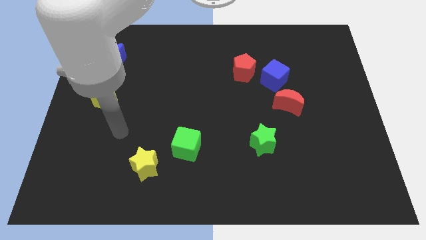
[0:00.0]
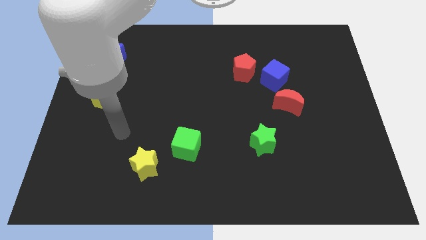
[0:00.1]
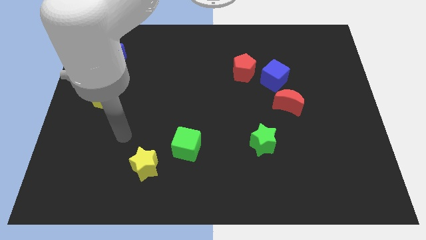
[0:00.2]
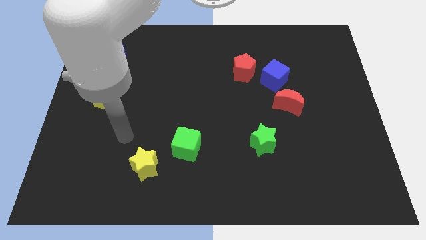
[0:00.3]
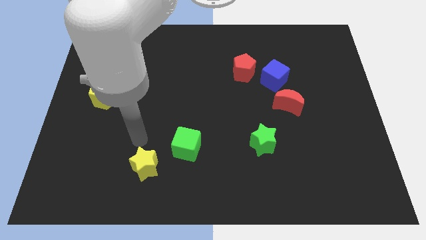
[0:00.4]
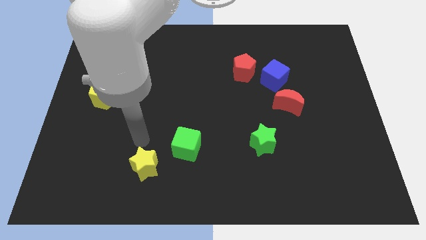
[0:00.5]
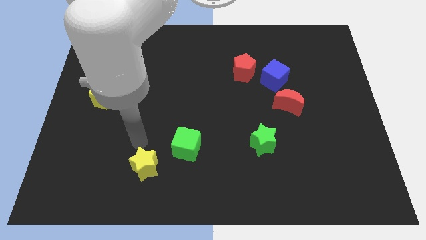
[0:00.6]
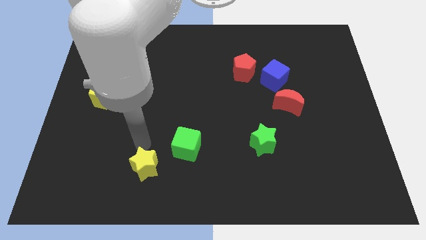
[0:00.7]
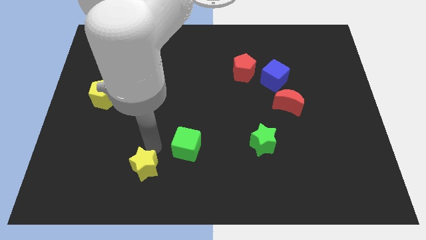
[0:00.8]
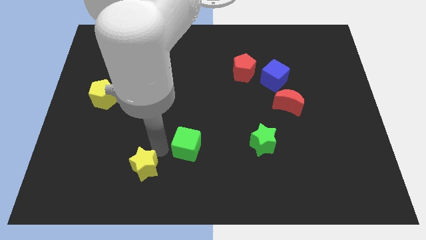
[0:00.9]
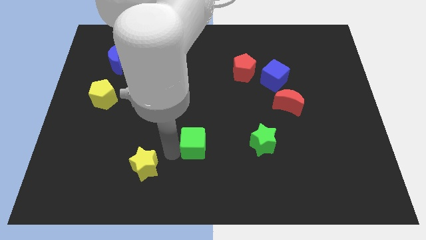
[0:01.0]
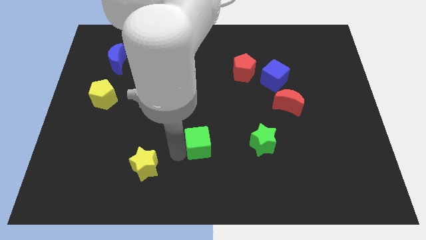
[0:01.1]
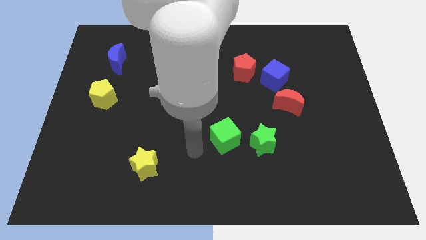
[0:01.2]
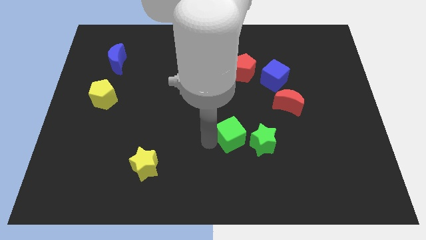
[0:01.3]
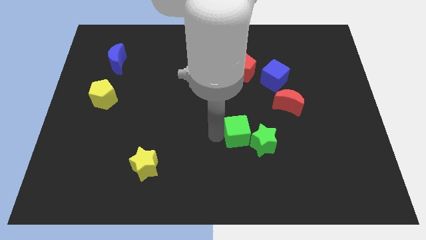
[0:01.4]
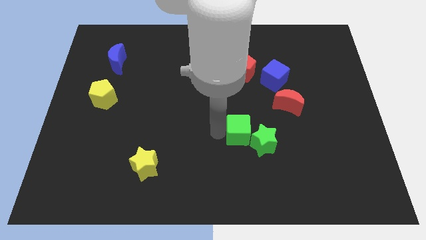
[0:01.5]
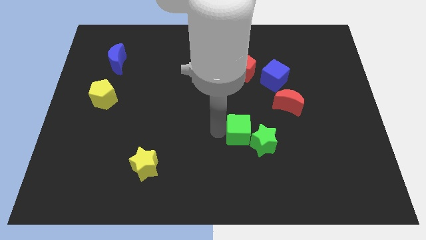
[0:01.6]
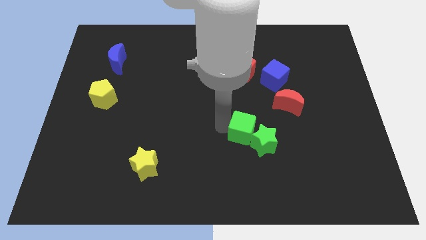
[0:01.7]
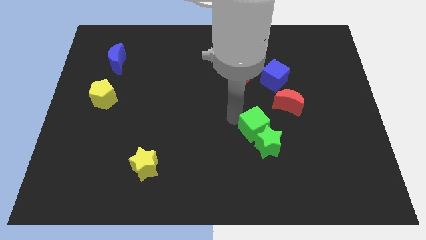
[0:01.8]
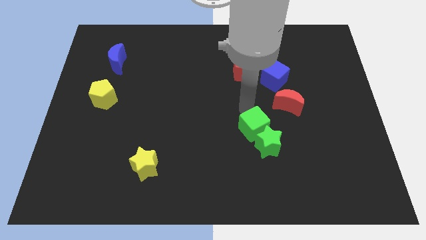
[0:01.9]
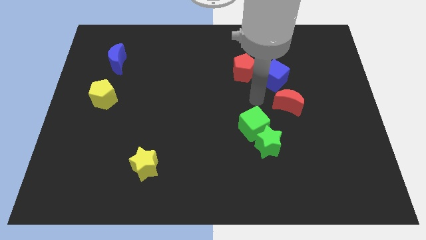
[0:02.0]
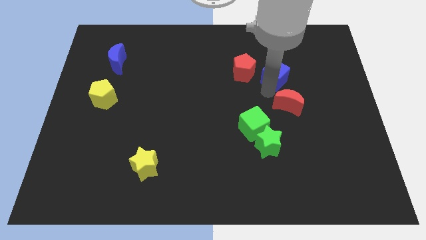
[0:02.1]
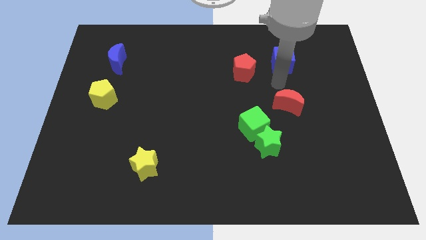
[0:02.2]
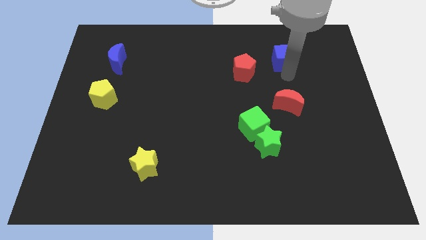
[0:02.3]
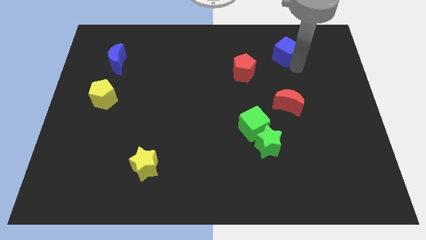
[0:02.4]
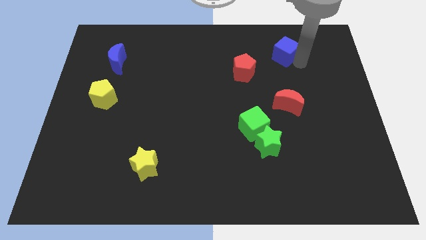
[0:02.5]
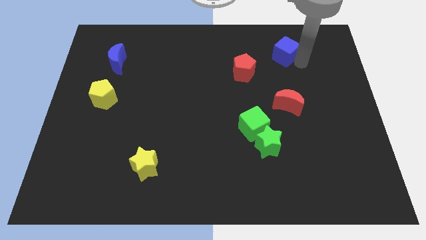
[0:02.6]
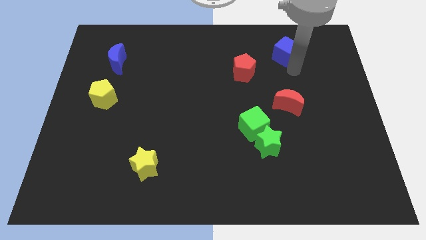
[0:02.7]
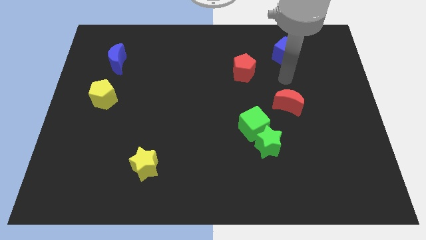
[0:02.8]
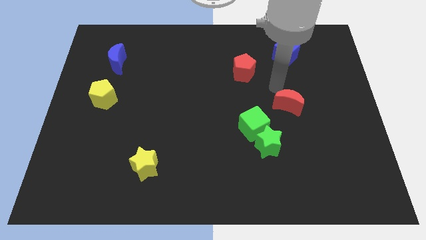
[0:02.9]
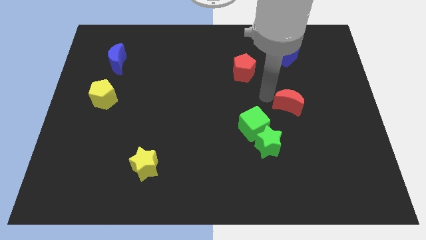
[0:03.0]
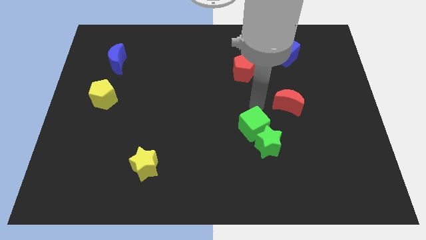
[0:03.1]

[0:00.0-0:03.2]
place the blue cube at the top of the red moon

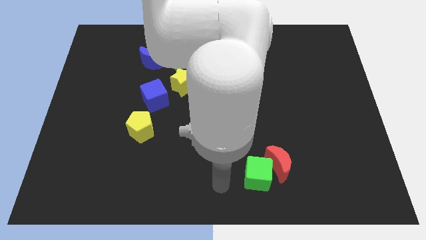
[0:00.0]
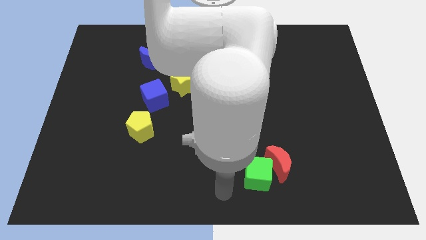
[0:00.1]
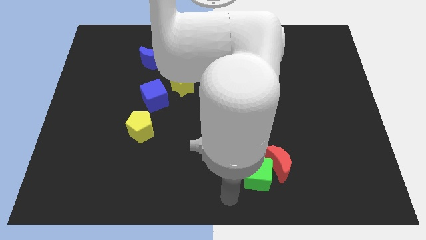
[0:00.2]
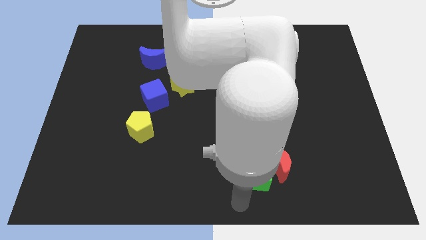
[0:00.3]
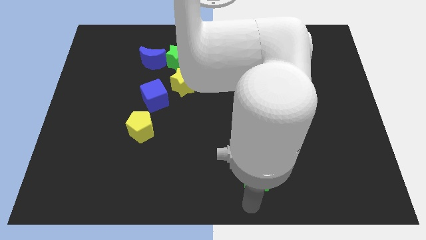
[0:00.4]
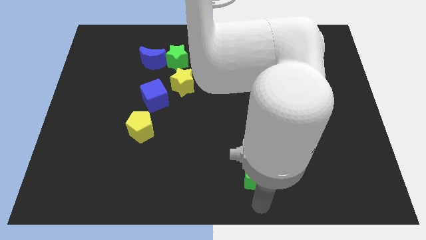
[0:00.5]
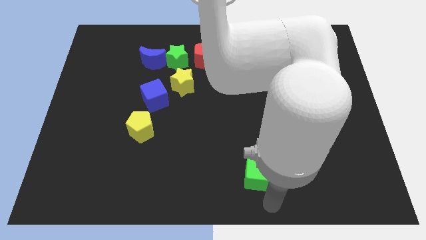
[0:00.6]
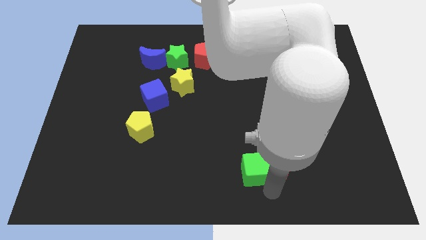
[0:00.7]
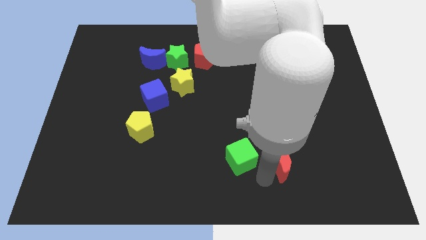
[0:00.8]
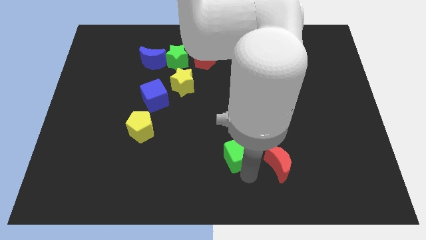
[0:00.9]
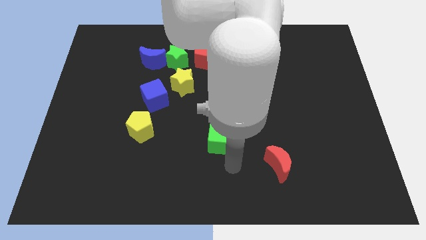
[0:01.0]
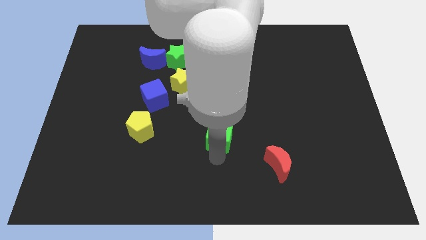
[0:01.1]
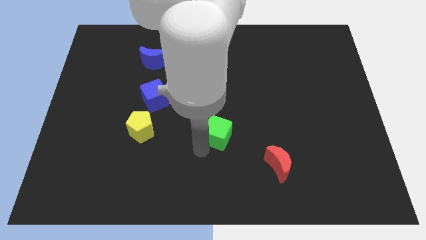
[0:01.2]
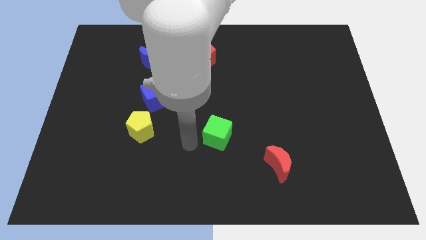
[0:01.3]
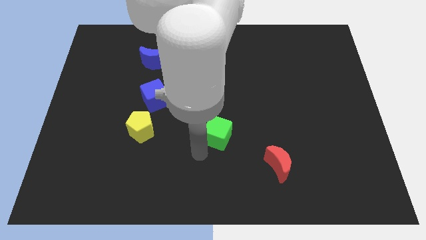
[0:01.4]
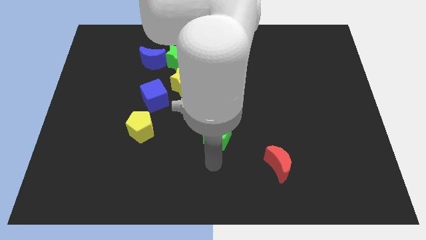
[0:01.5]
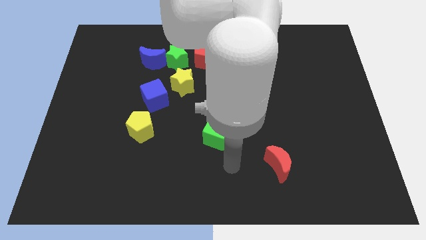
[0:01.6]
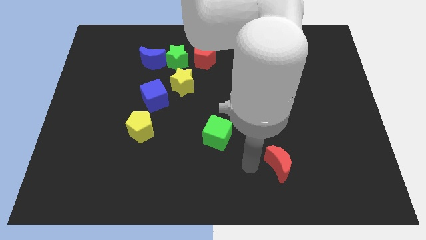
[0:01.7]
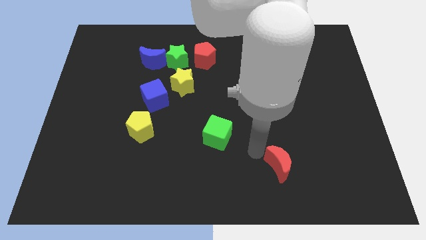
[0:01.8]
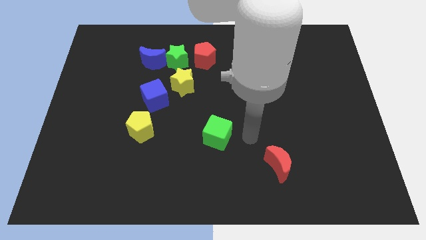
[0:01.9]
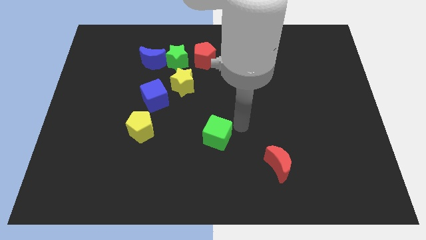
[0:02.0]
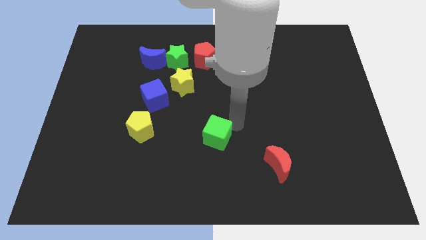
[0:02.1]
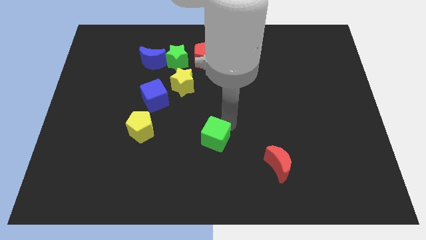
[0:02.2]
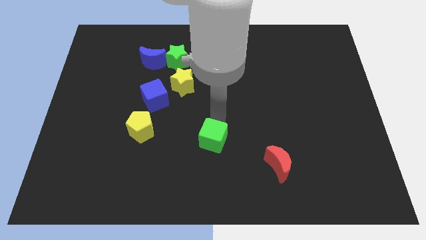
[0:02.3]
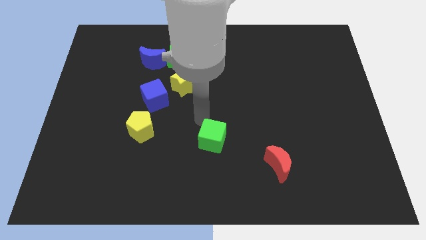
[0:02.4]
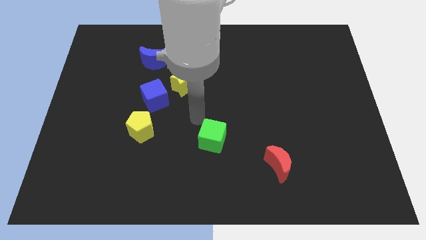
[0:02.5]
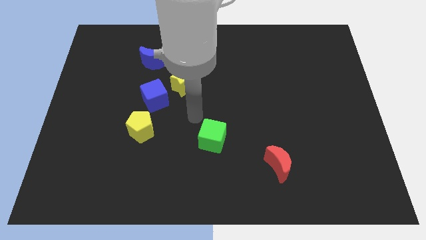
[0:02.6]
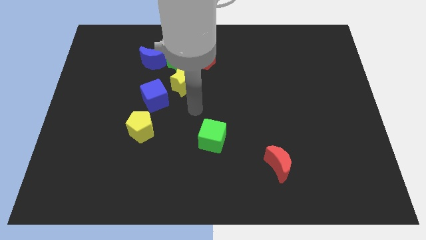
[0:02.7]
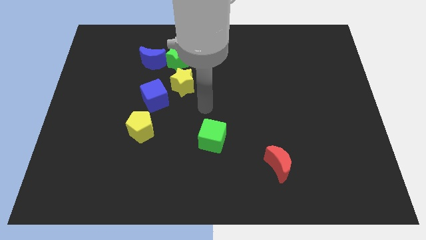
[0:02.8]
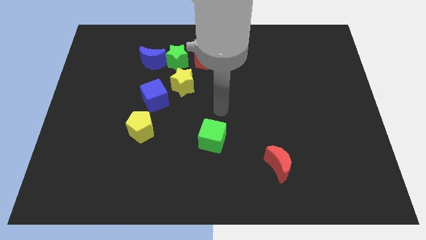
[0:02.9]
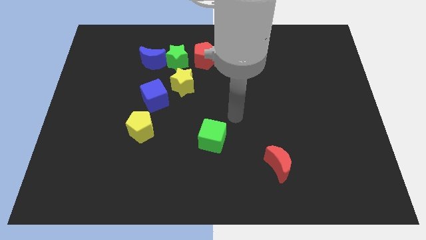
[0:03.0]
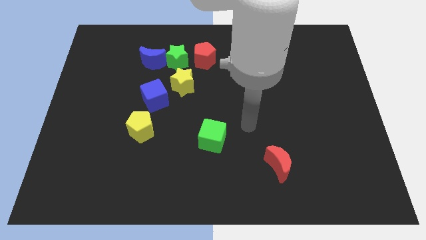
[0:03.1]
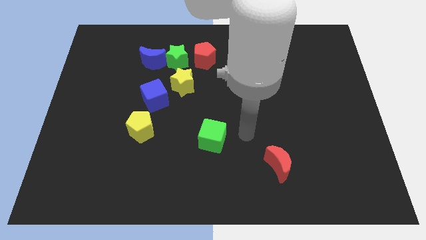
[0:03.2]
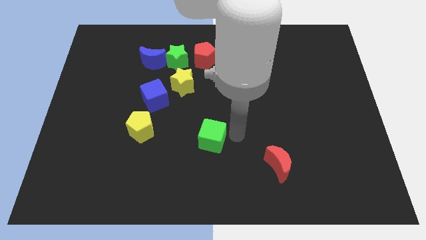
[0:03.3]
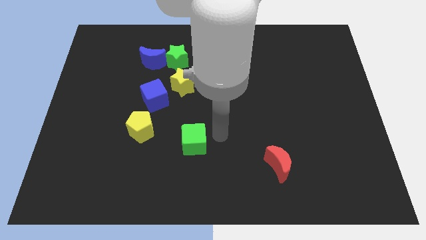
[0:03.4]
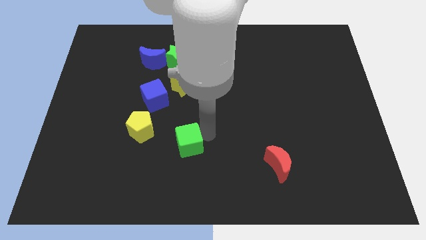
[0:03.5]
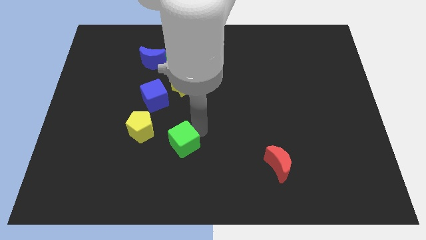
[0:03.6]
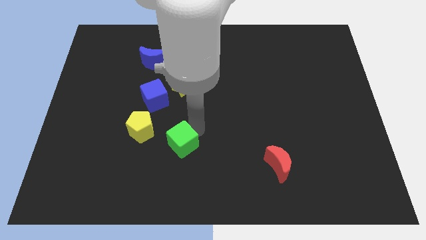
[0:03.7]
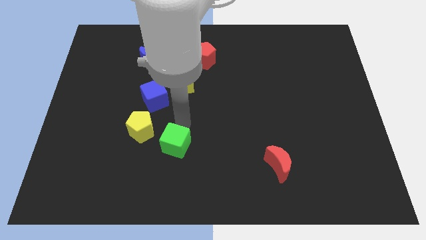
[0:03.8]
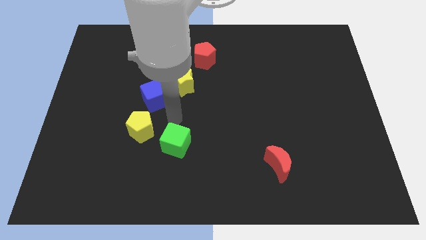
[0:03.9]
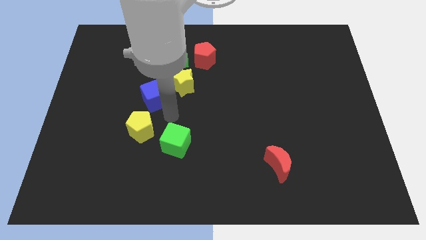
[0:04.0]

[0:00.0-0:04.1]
place your arm in between the blue cube and green cube

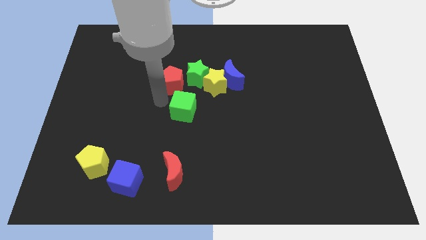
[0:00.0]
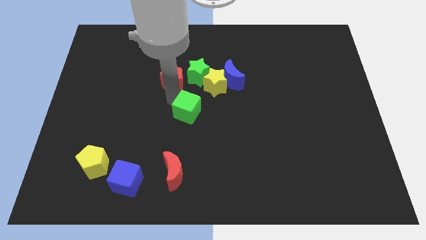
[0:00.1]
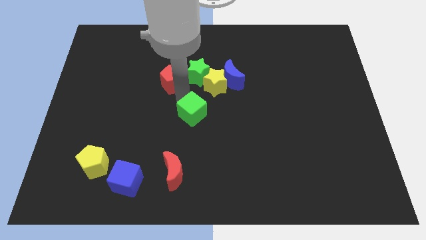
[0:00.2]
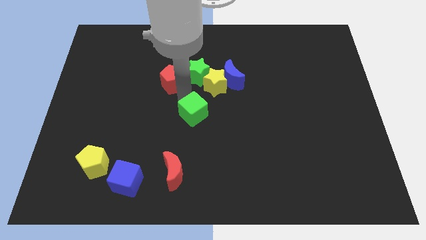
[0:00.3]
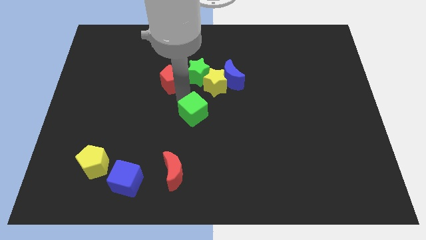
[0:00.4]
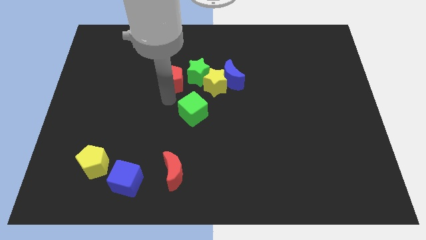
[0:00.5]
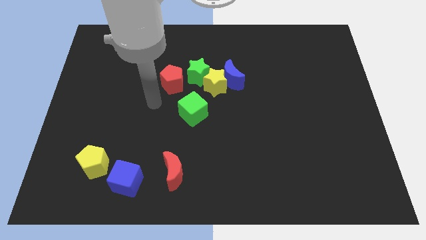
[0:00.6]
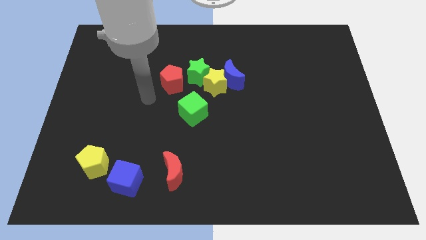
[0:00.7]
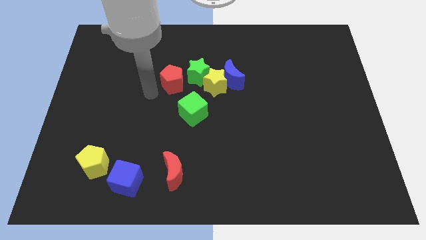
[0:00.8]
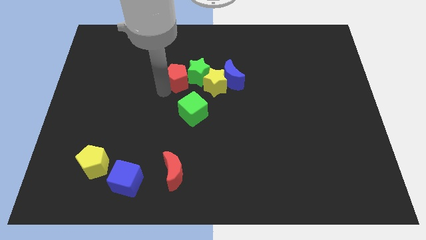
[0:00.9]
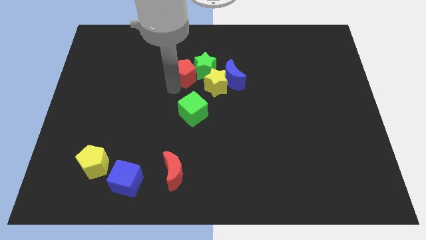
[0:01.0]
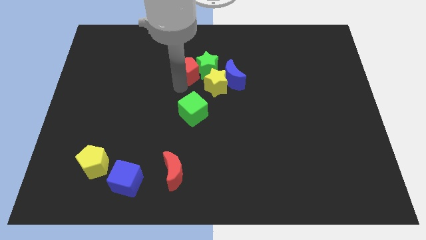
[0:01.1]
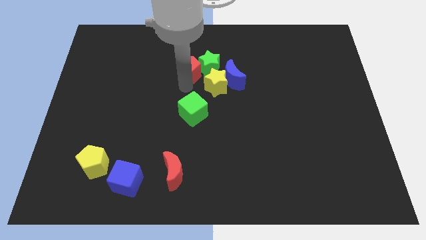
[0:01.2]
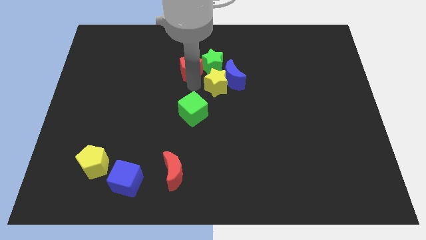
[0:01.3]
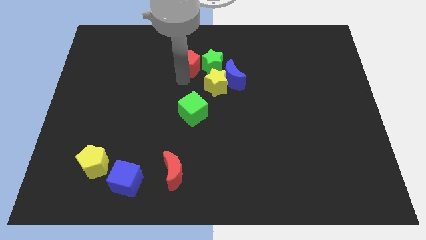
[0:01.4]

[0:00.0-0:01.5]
push red pentagon into the green star

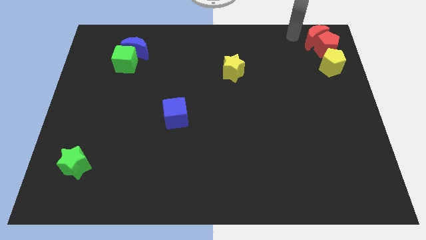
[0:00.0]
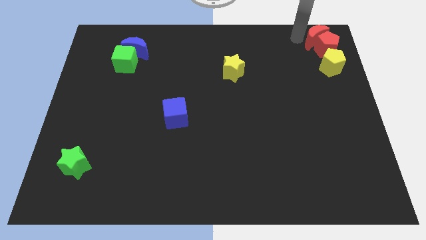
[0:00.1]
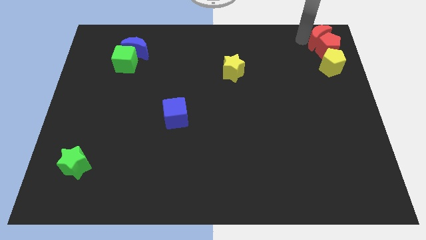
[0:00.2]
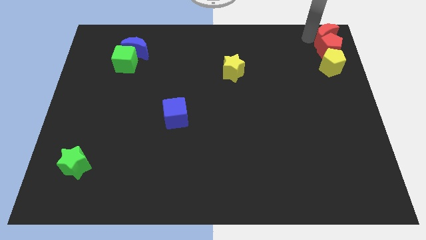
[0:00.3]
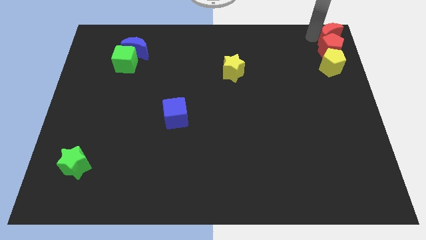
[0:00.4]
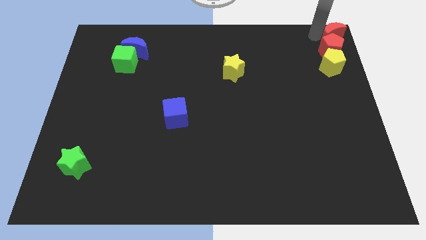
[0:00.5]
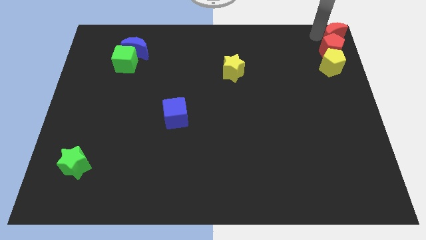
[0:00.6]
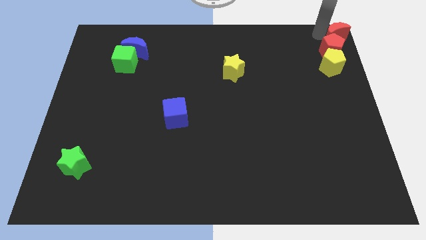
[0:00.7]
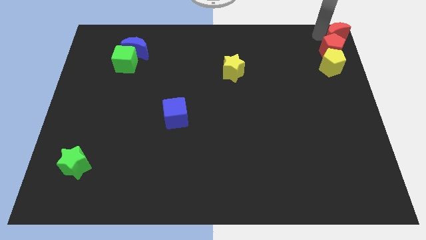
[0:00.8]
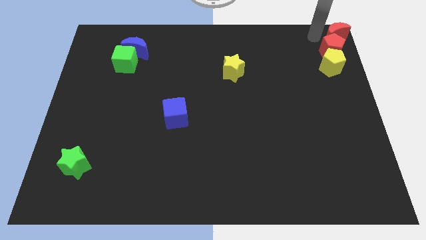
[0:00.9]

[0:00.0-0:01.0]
place the red crescent towards the top right corner of the board
